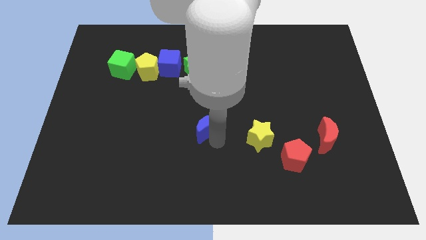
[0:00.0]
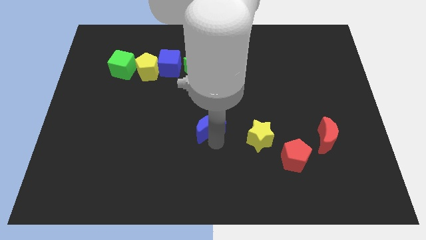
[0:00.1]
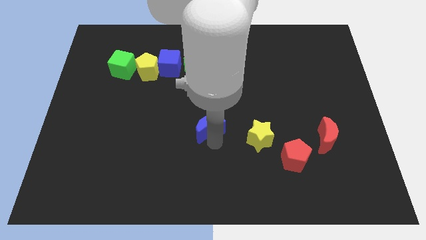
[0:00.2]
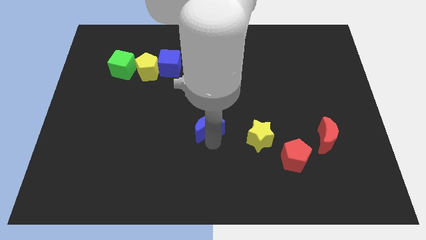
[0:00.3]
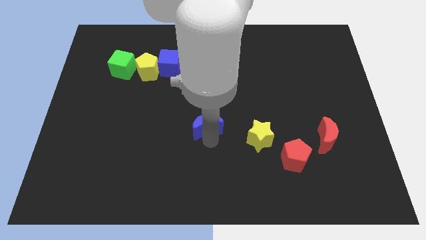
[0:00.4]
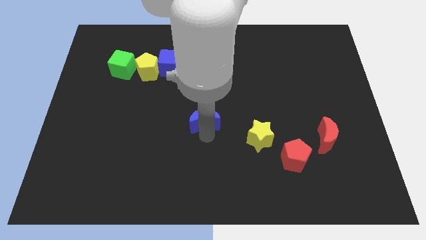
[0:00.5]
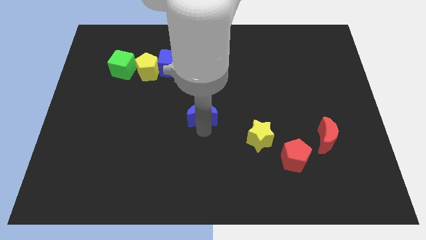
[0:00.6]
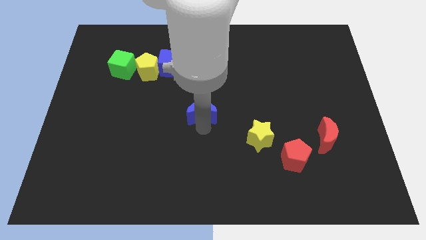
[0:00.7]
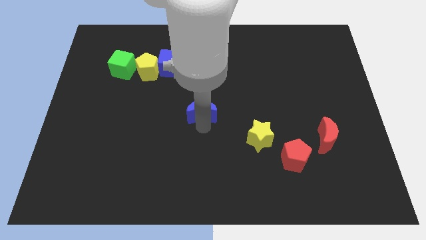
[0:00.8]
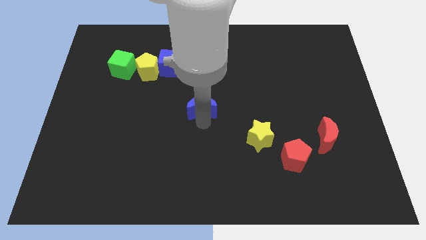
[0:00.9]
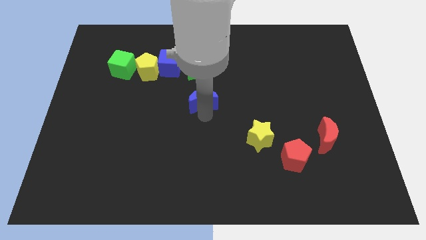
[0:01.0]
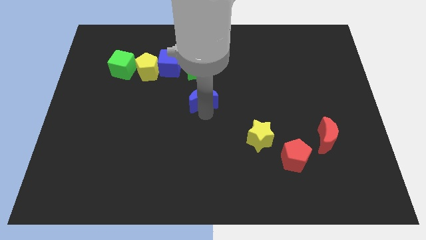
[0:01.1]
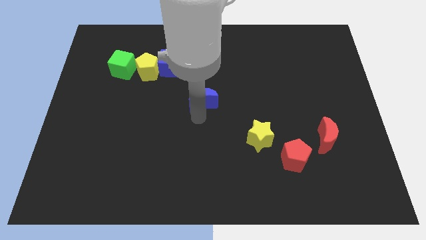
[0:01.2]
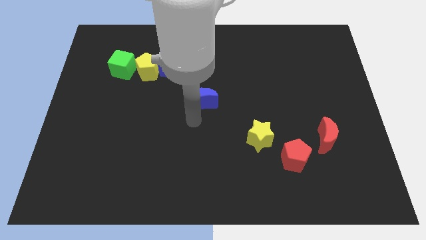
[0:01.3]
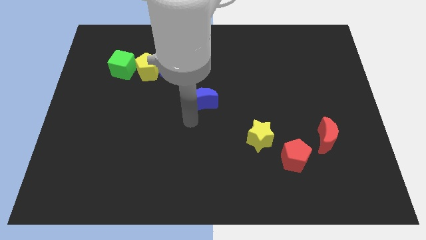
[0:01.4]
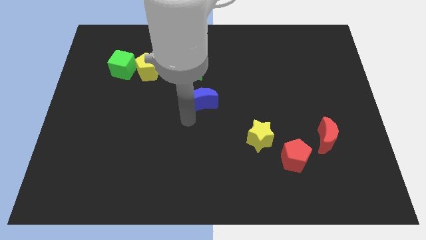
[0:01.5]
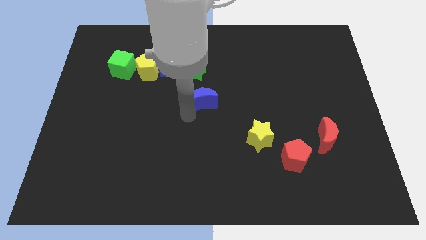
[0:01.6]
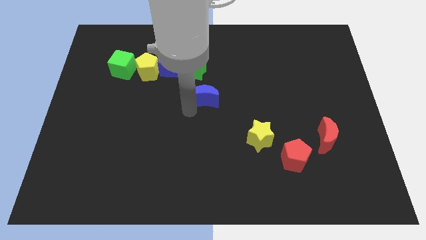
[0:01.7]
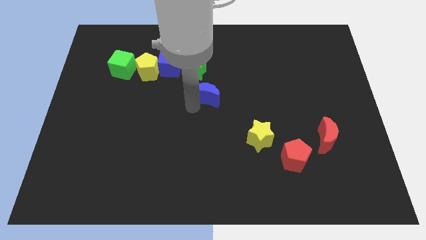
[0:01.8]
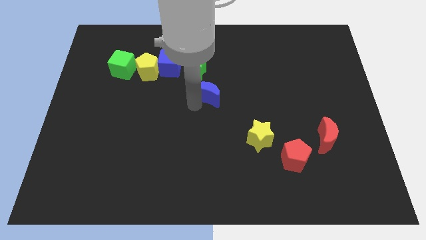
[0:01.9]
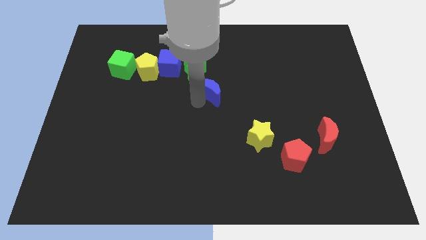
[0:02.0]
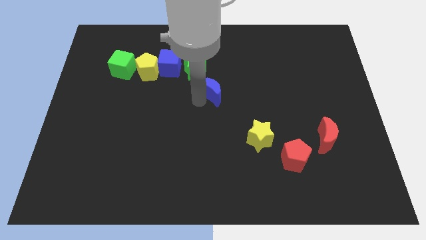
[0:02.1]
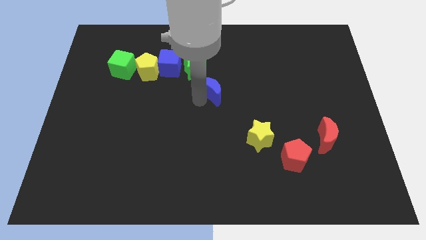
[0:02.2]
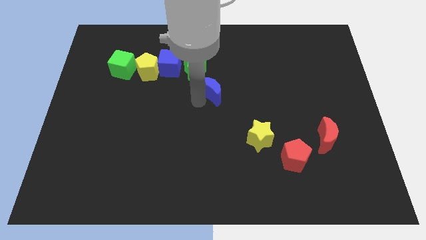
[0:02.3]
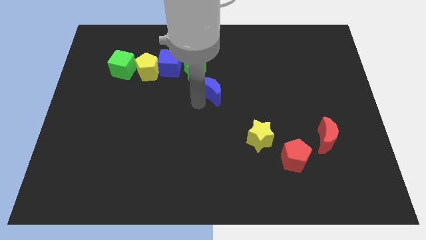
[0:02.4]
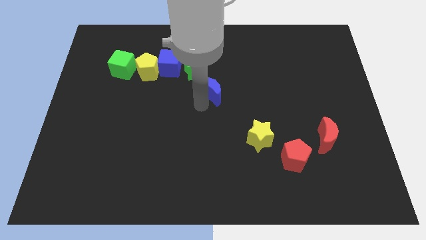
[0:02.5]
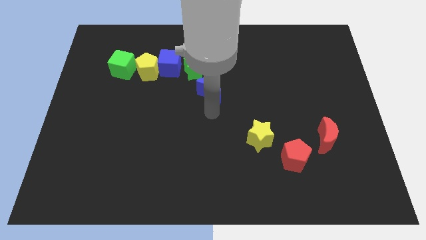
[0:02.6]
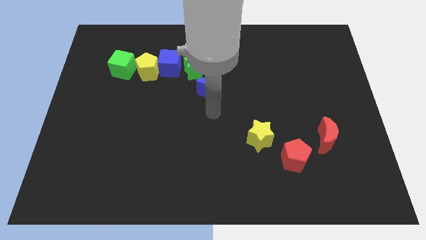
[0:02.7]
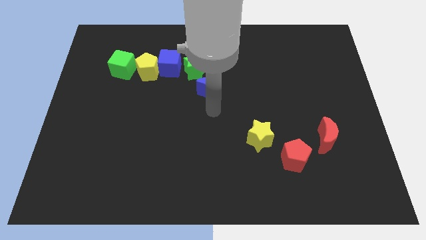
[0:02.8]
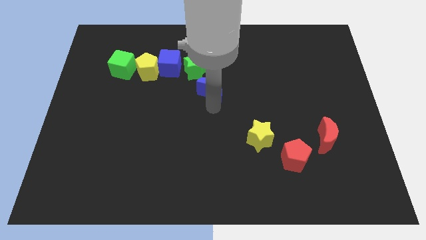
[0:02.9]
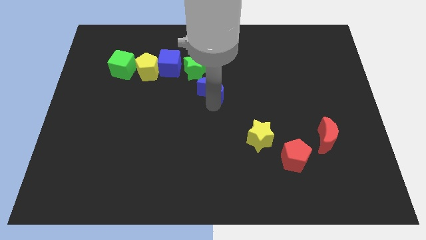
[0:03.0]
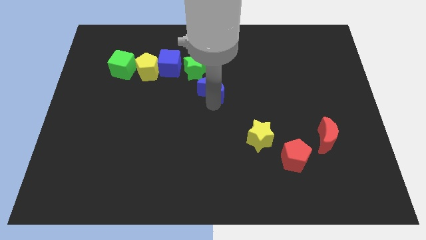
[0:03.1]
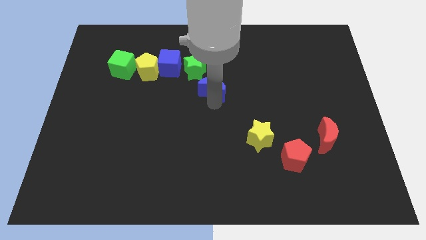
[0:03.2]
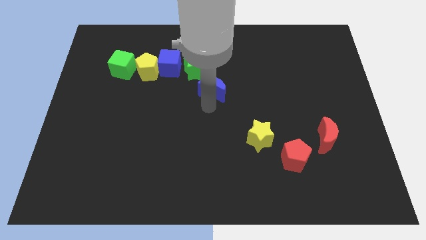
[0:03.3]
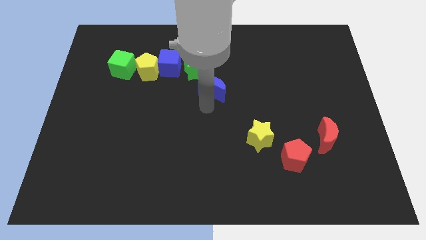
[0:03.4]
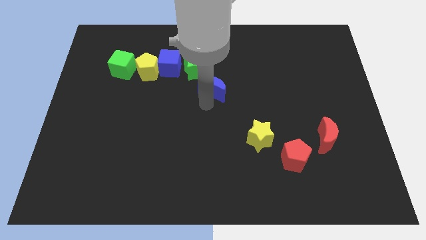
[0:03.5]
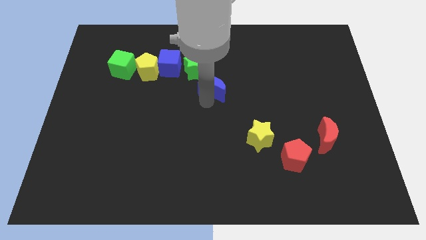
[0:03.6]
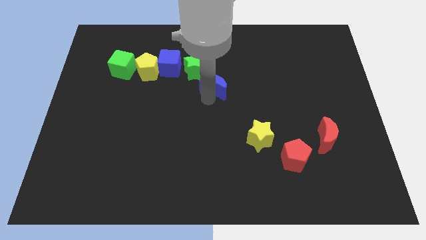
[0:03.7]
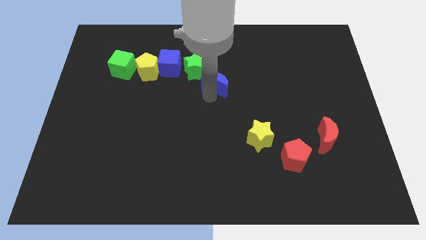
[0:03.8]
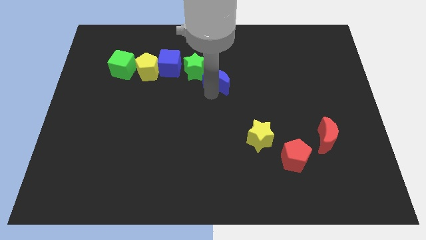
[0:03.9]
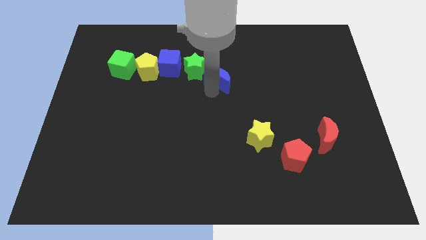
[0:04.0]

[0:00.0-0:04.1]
slide the blue moon diagonally top left to the yellow star

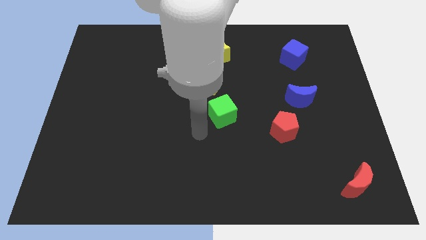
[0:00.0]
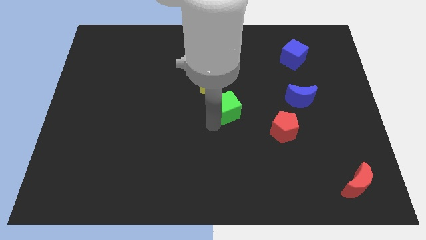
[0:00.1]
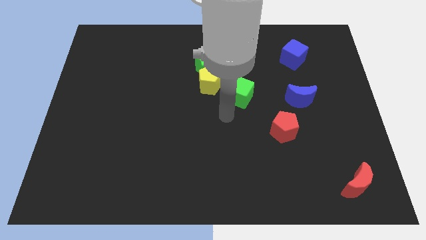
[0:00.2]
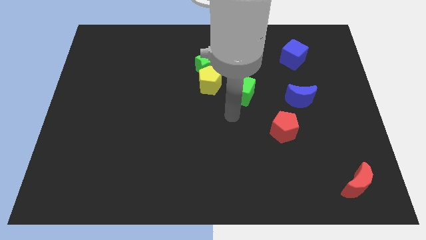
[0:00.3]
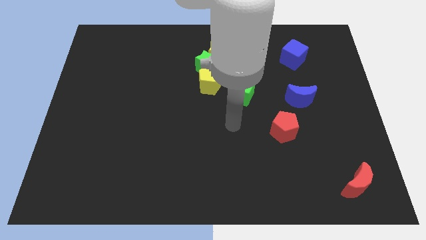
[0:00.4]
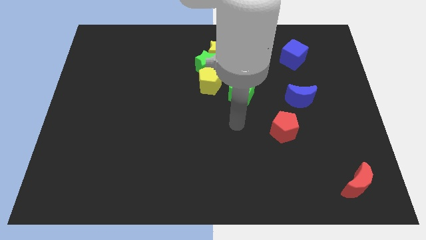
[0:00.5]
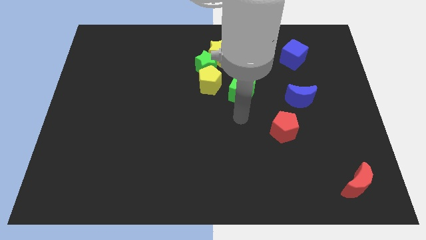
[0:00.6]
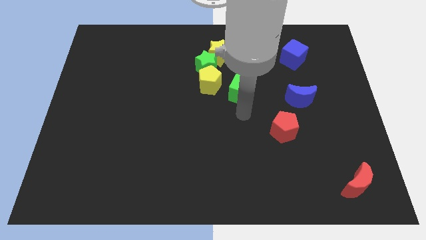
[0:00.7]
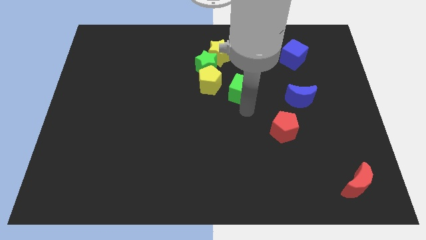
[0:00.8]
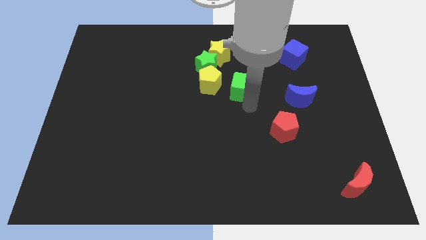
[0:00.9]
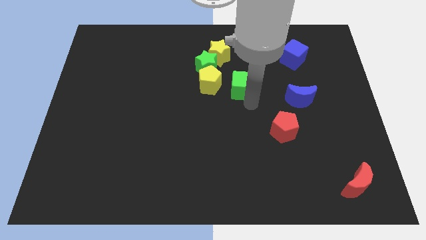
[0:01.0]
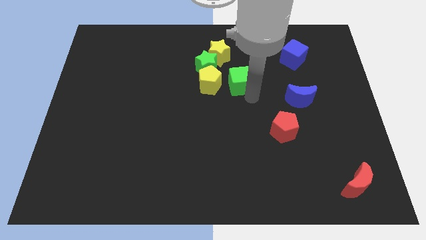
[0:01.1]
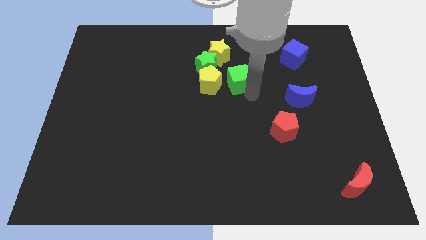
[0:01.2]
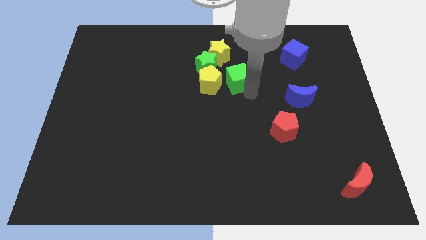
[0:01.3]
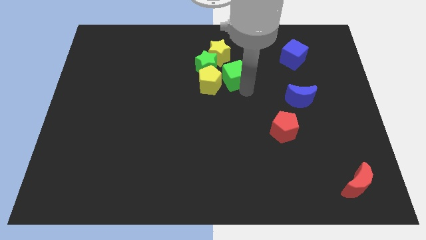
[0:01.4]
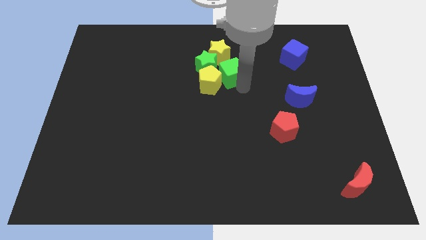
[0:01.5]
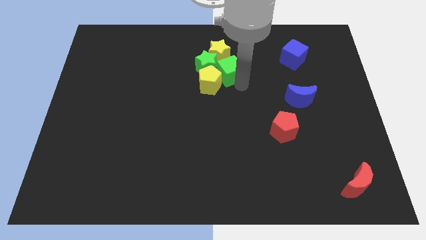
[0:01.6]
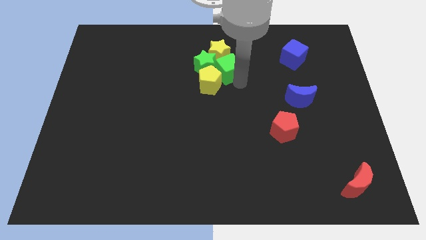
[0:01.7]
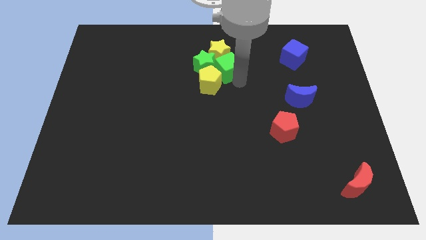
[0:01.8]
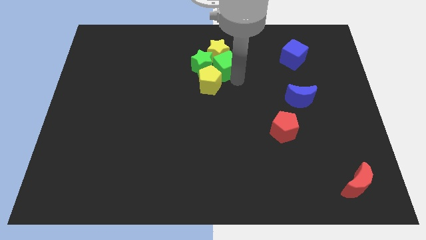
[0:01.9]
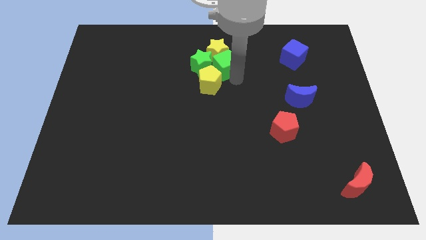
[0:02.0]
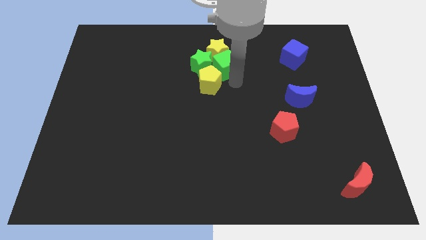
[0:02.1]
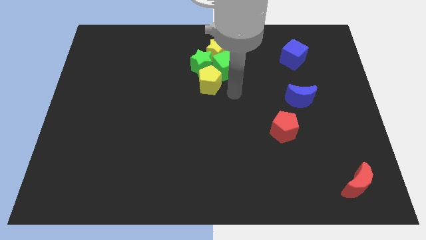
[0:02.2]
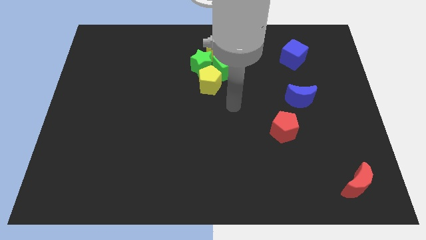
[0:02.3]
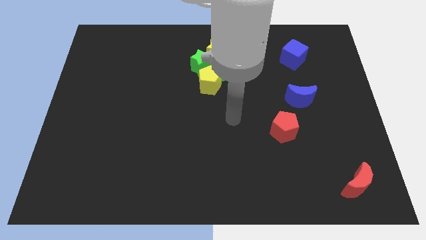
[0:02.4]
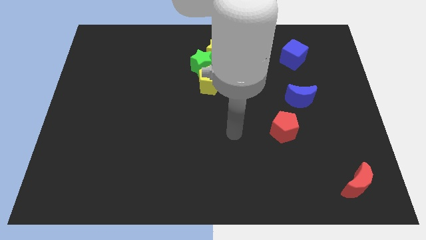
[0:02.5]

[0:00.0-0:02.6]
push the green cube into the yellow star

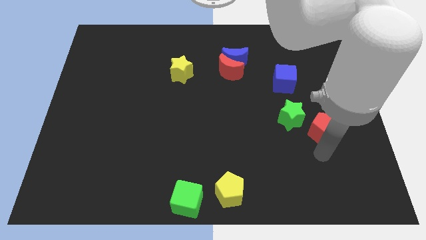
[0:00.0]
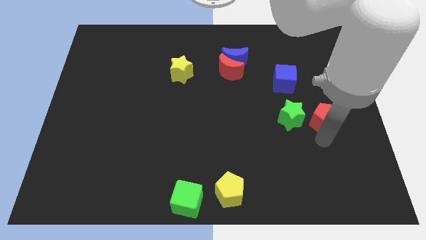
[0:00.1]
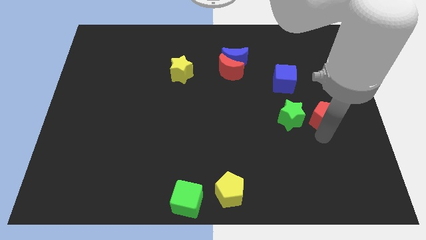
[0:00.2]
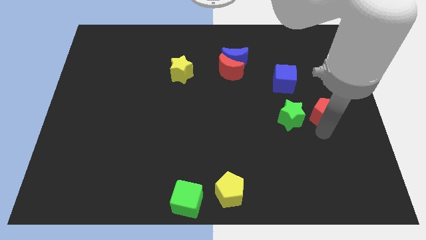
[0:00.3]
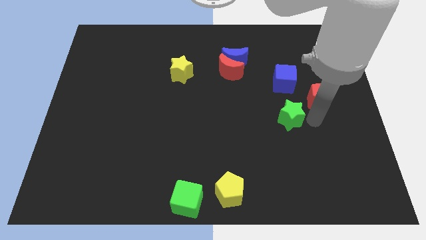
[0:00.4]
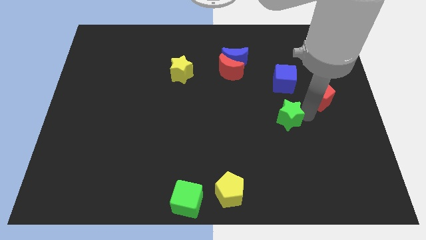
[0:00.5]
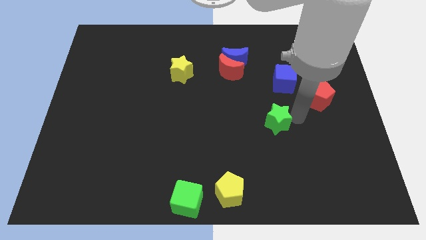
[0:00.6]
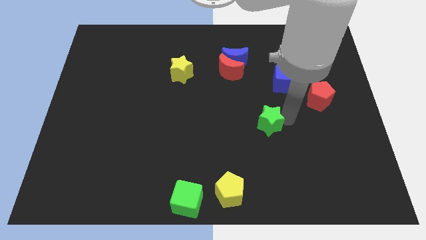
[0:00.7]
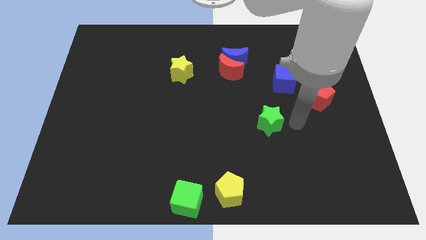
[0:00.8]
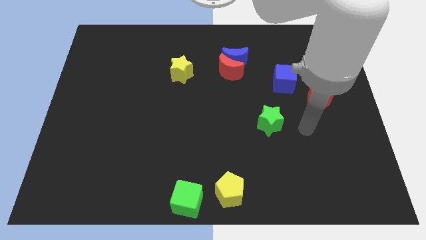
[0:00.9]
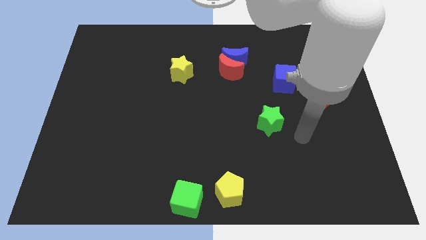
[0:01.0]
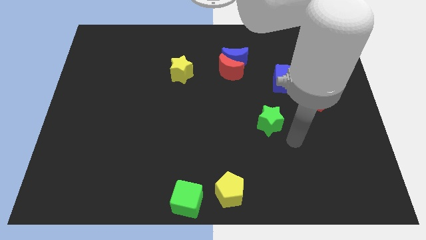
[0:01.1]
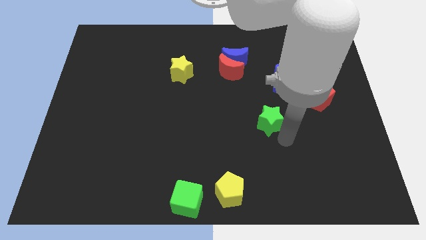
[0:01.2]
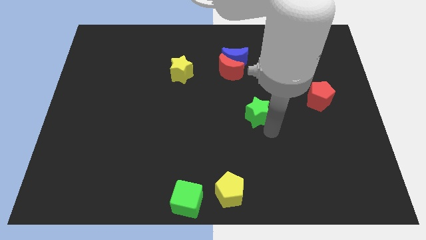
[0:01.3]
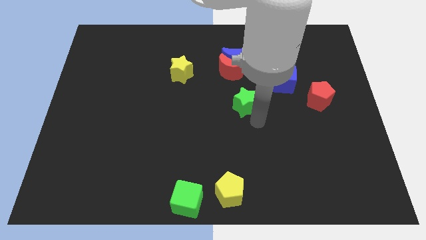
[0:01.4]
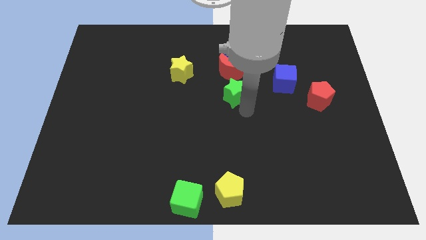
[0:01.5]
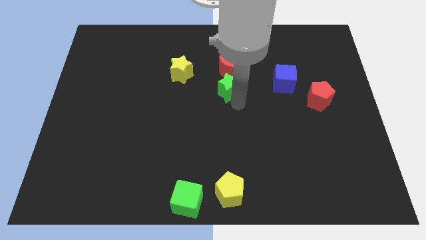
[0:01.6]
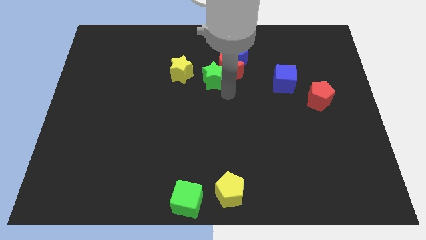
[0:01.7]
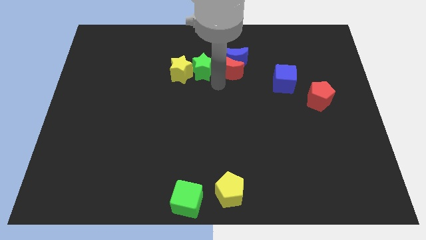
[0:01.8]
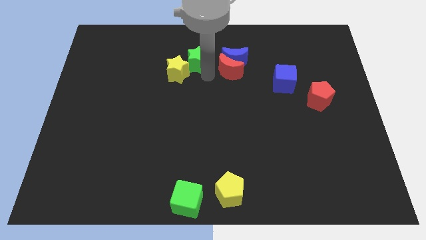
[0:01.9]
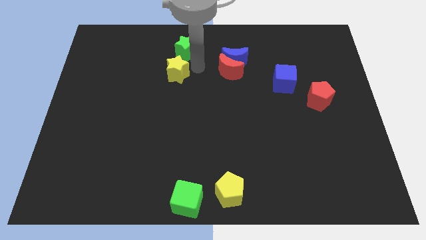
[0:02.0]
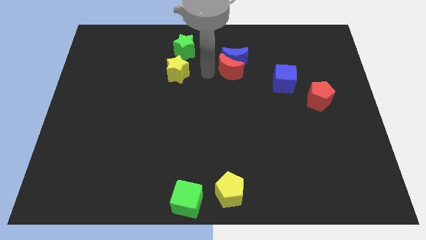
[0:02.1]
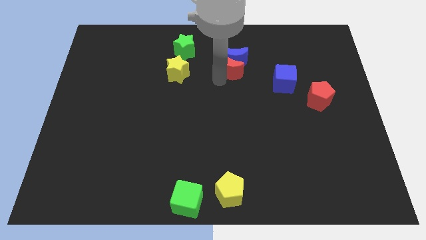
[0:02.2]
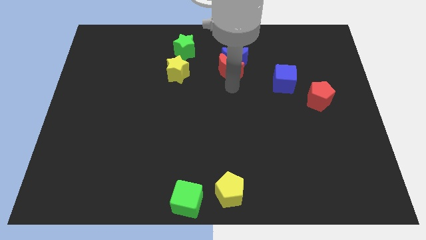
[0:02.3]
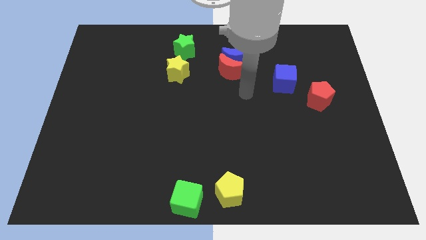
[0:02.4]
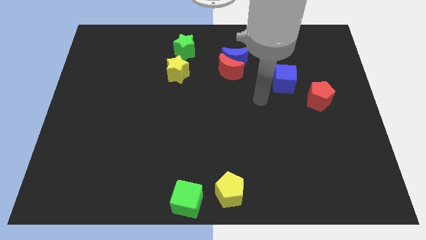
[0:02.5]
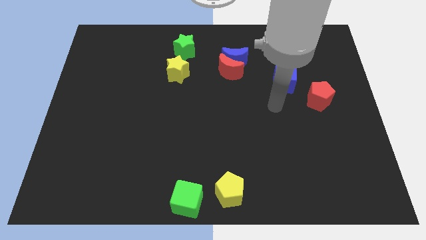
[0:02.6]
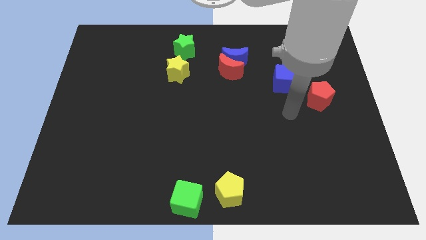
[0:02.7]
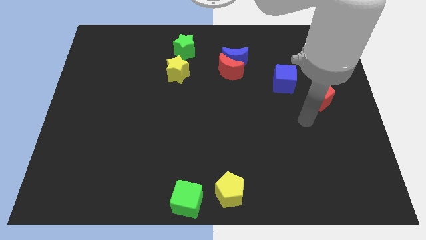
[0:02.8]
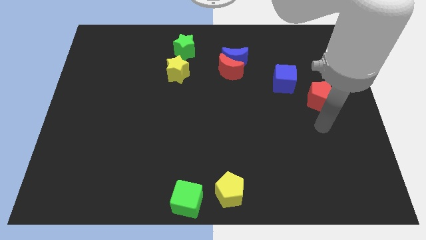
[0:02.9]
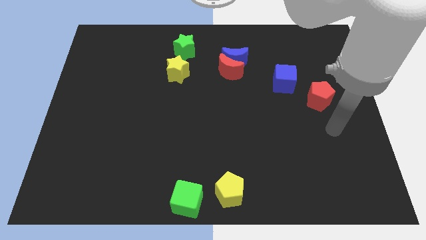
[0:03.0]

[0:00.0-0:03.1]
separate green star from the red pentagon
